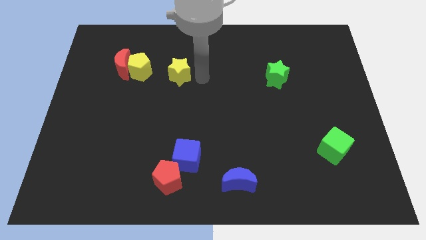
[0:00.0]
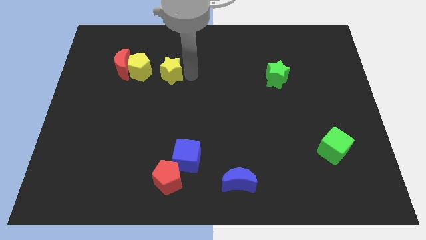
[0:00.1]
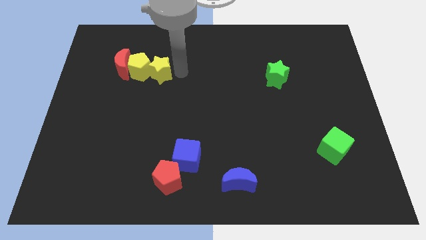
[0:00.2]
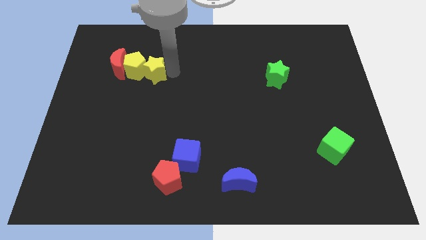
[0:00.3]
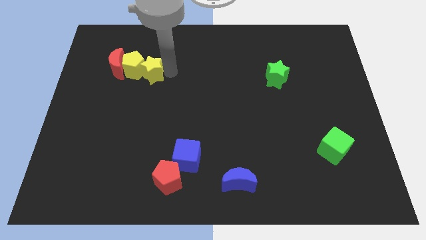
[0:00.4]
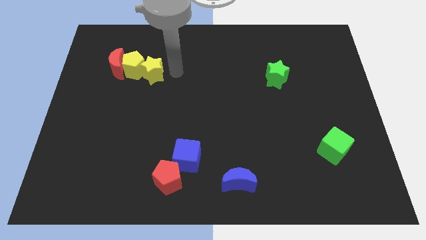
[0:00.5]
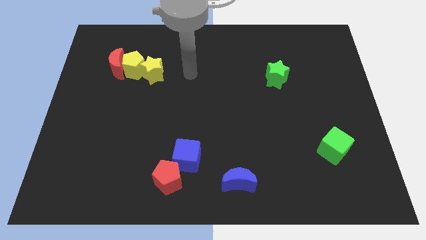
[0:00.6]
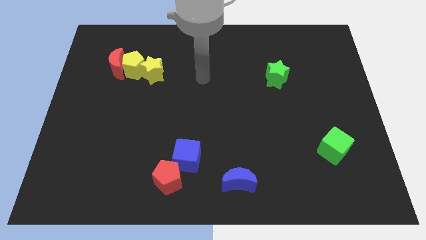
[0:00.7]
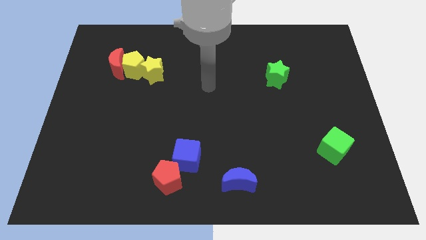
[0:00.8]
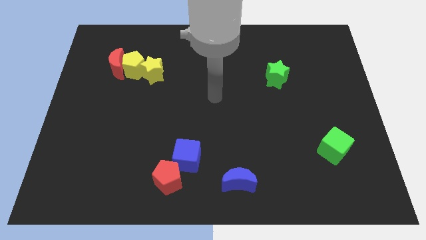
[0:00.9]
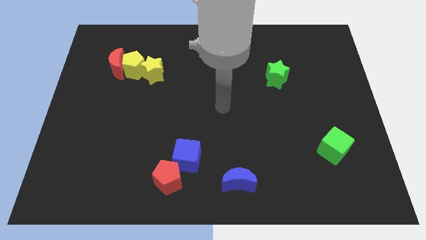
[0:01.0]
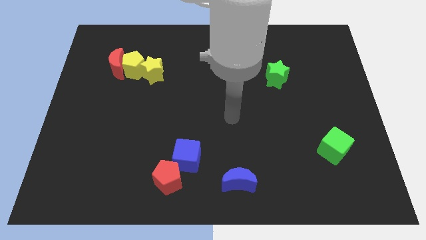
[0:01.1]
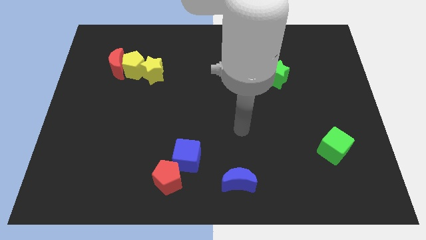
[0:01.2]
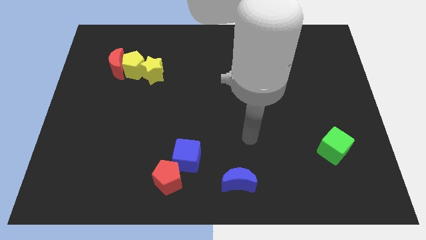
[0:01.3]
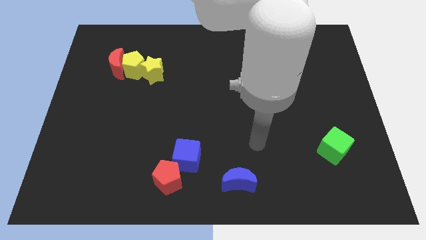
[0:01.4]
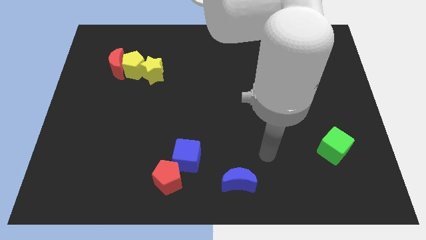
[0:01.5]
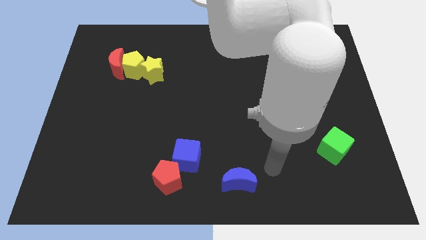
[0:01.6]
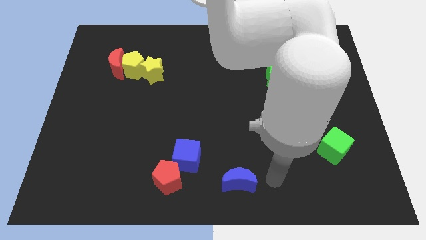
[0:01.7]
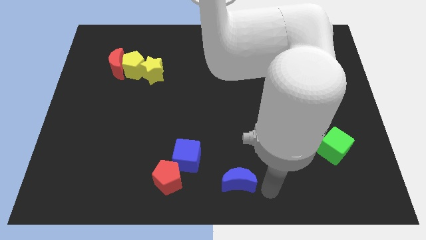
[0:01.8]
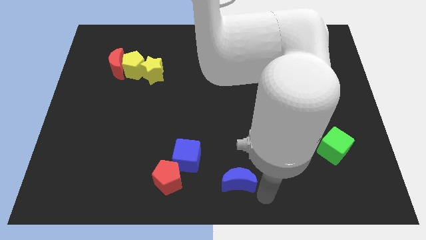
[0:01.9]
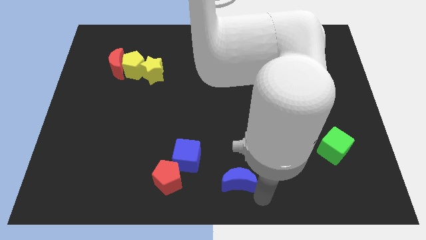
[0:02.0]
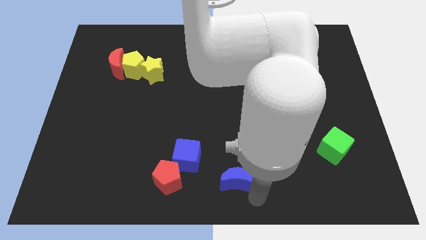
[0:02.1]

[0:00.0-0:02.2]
push the yellow pentagon and red crescent with yellow star

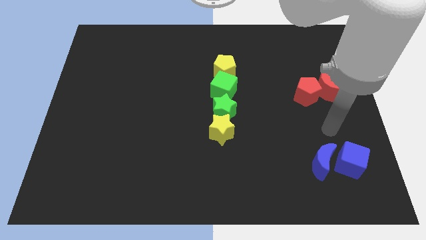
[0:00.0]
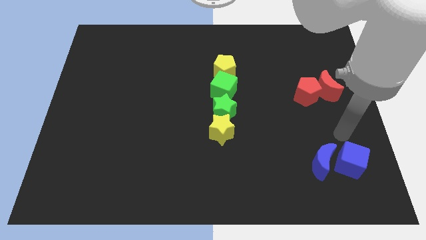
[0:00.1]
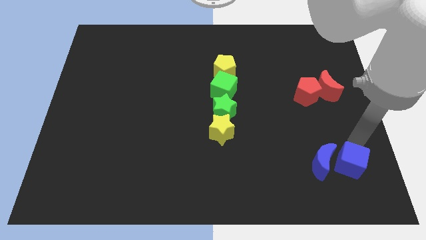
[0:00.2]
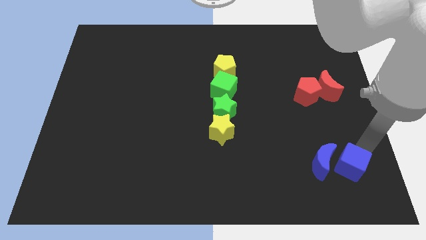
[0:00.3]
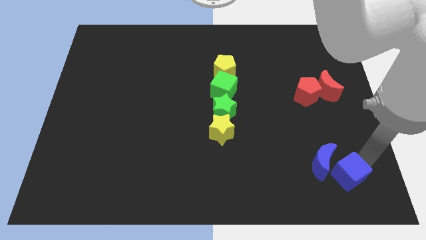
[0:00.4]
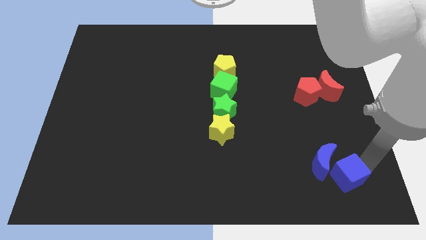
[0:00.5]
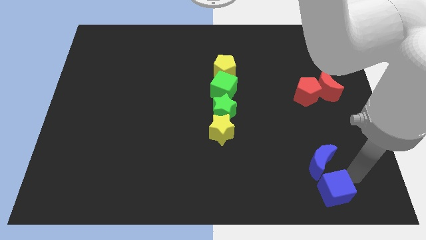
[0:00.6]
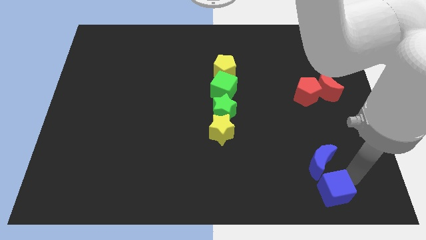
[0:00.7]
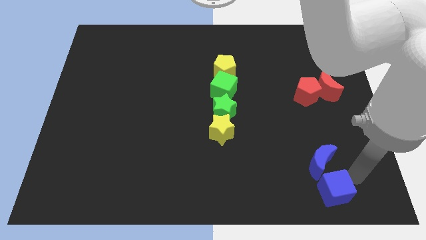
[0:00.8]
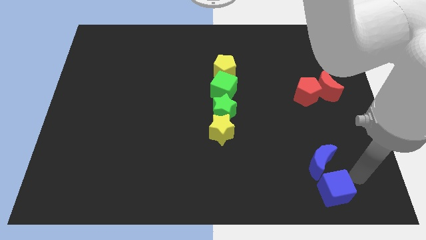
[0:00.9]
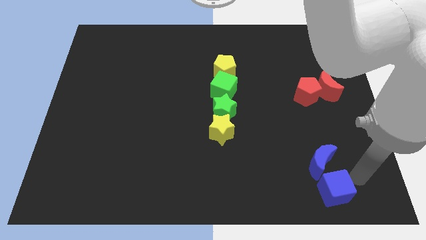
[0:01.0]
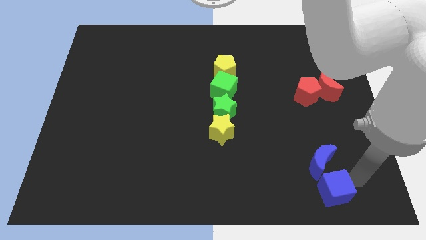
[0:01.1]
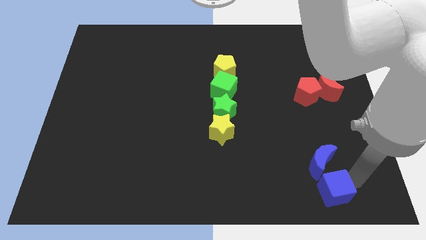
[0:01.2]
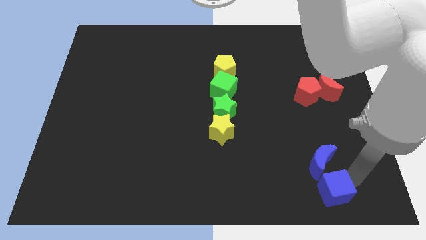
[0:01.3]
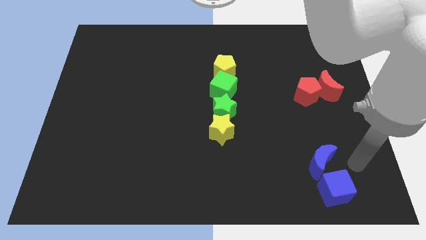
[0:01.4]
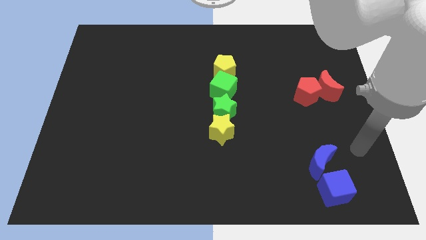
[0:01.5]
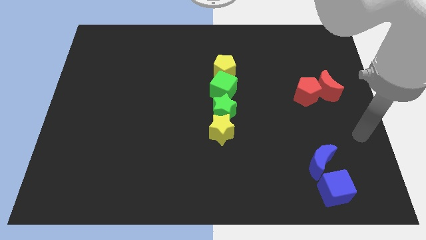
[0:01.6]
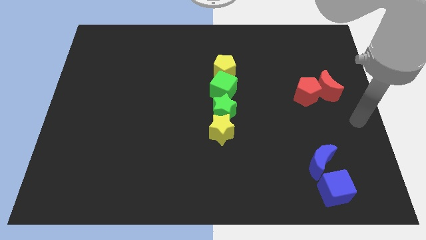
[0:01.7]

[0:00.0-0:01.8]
place the blue cube bottom to the blue crescent

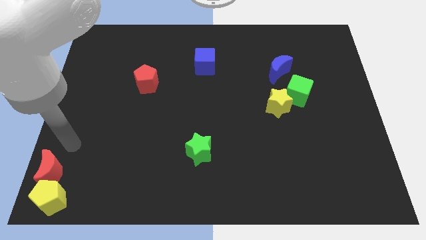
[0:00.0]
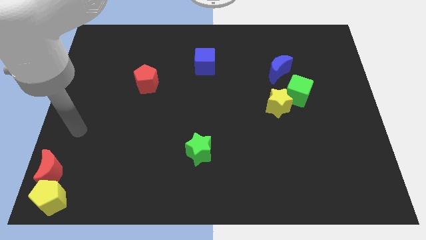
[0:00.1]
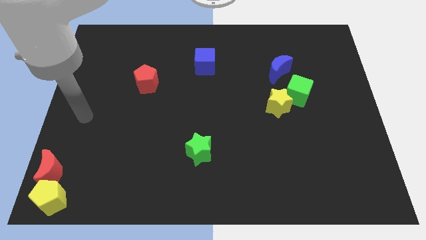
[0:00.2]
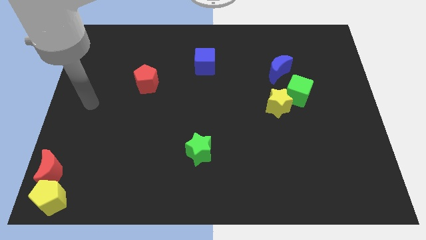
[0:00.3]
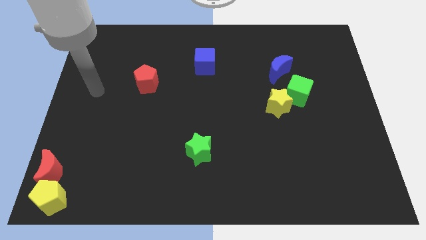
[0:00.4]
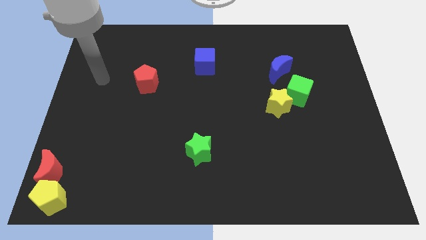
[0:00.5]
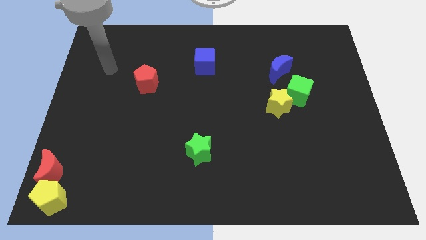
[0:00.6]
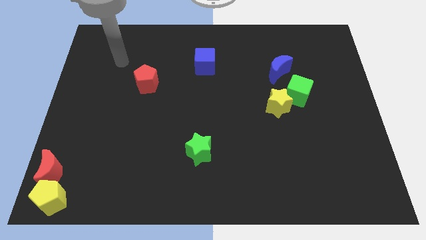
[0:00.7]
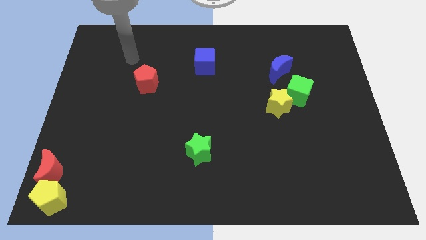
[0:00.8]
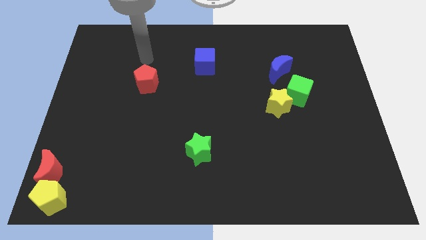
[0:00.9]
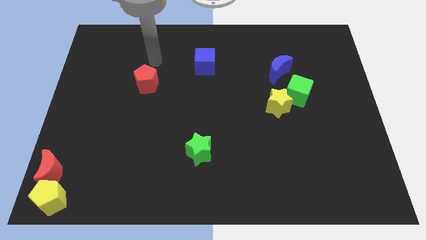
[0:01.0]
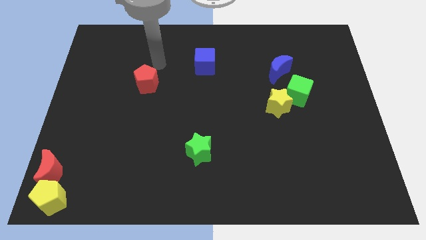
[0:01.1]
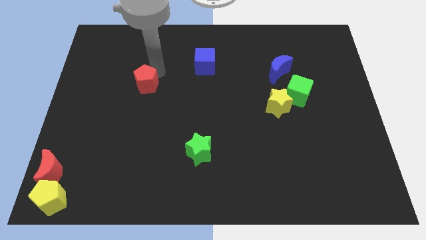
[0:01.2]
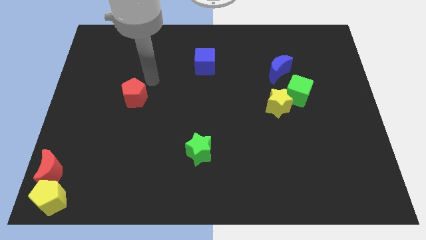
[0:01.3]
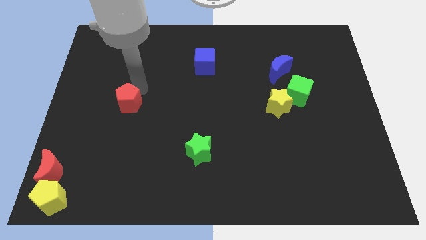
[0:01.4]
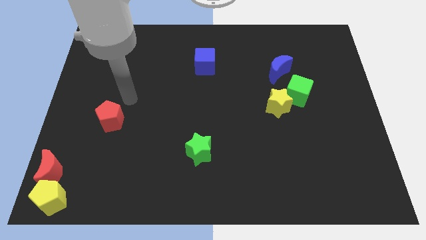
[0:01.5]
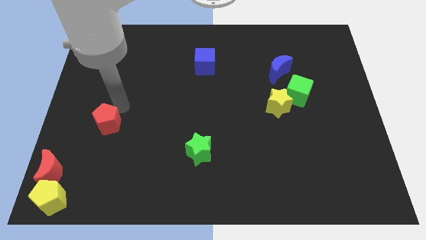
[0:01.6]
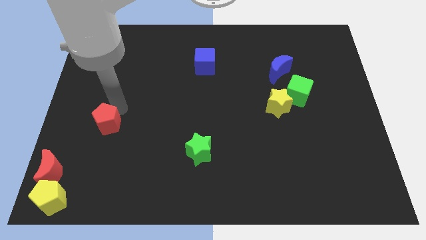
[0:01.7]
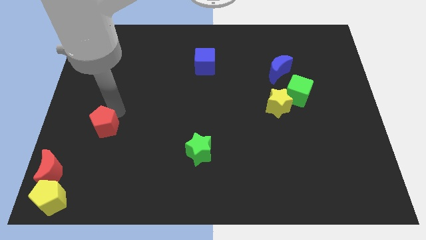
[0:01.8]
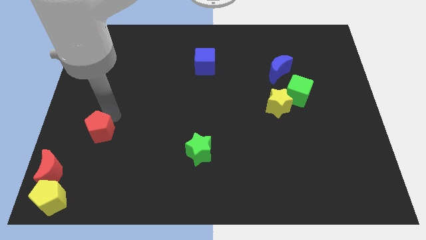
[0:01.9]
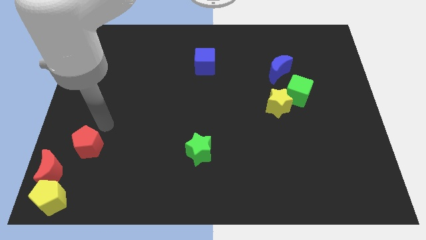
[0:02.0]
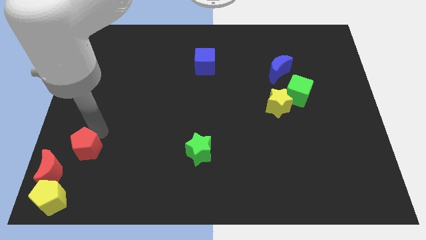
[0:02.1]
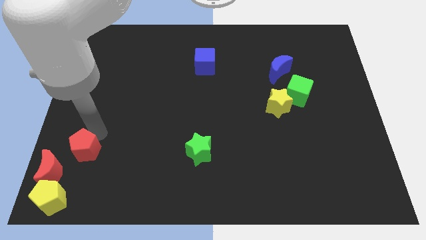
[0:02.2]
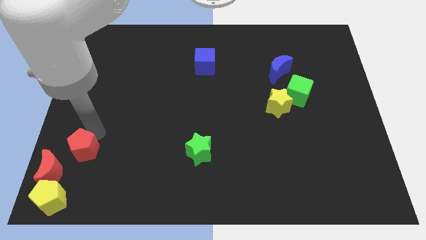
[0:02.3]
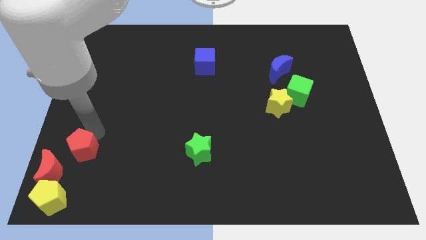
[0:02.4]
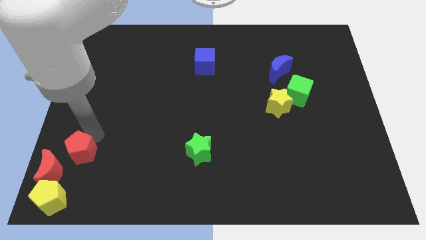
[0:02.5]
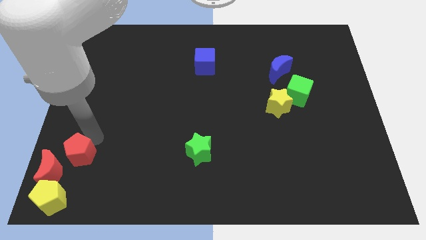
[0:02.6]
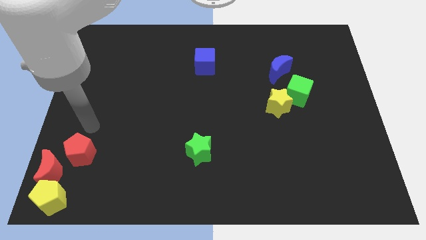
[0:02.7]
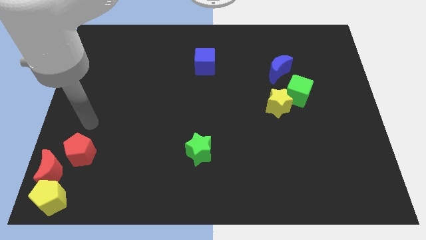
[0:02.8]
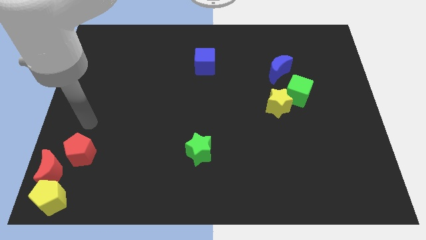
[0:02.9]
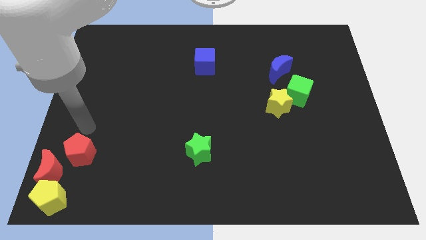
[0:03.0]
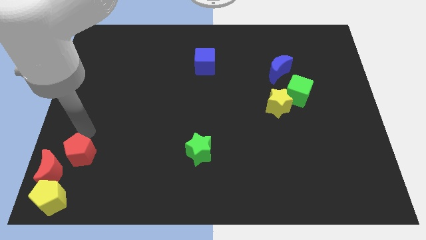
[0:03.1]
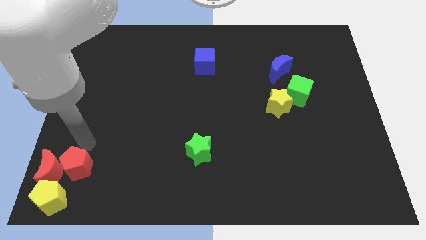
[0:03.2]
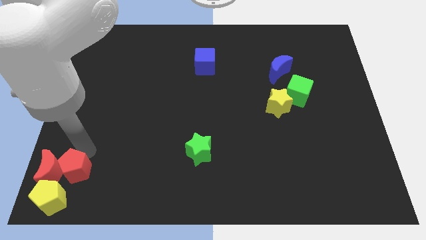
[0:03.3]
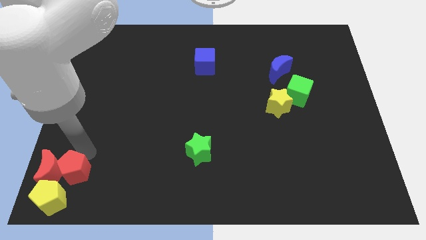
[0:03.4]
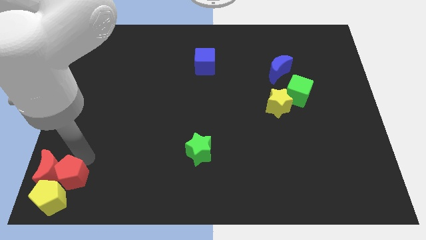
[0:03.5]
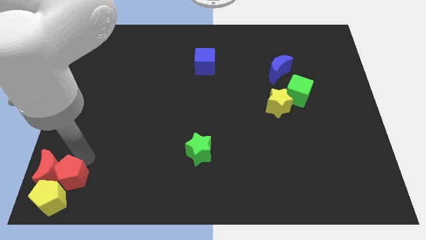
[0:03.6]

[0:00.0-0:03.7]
place the red pentagon right to the red crescent

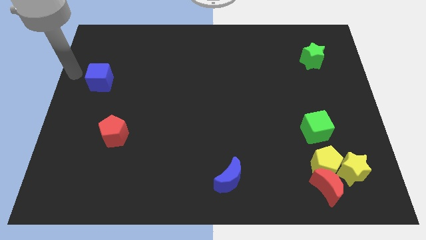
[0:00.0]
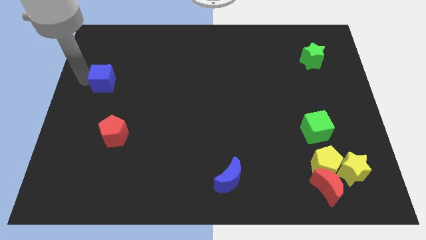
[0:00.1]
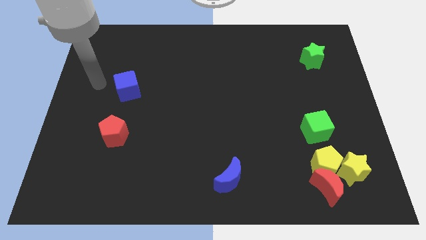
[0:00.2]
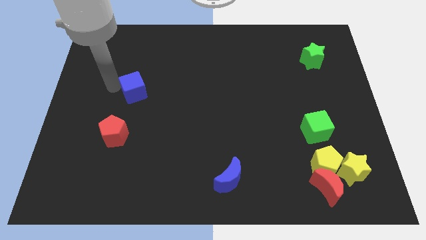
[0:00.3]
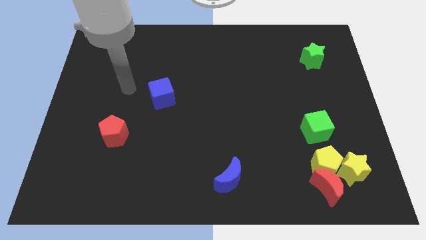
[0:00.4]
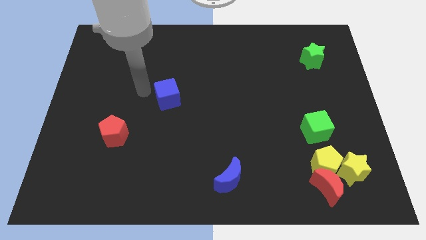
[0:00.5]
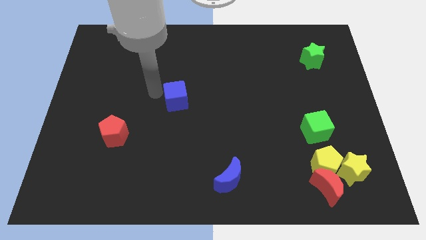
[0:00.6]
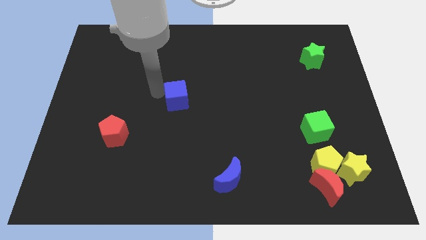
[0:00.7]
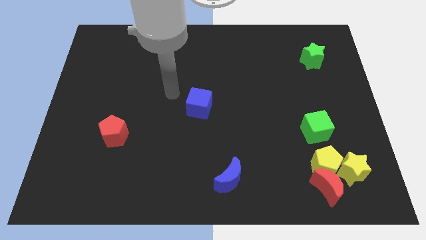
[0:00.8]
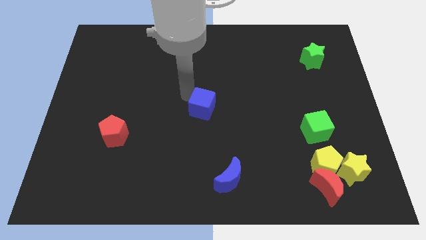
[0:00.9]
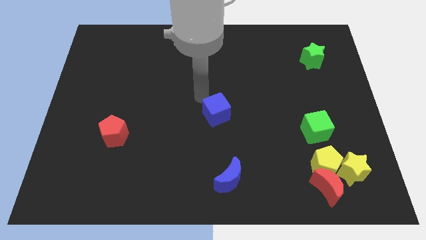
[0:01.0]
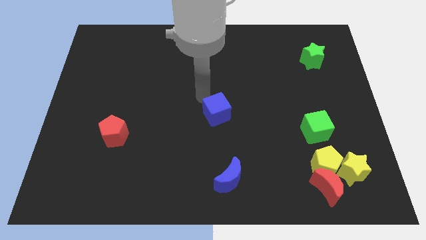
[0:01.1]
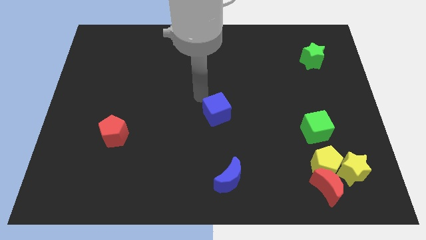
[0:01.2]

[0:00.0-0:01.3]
move blue cube to the top of the blue moon

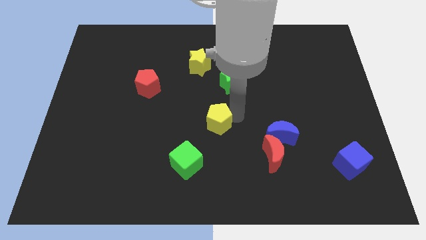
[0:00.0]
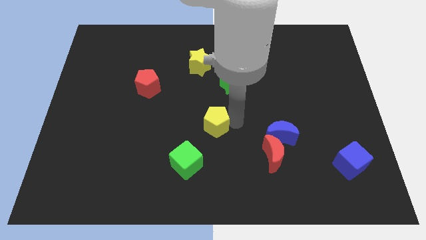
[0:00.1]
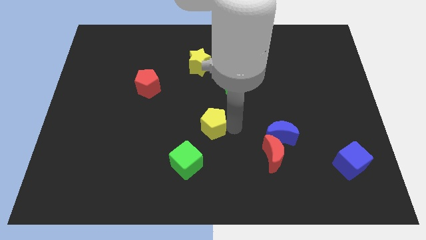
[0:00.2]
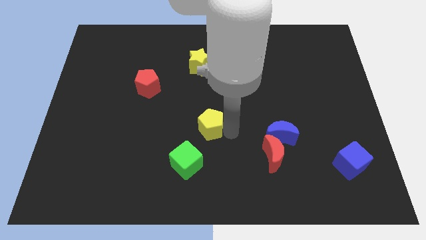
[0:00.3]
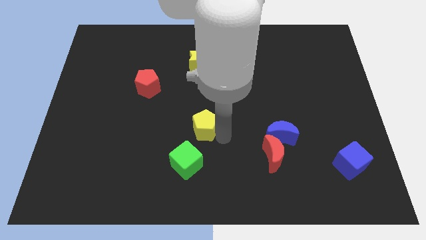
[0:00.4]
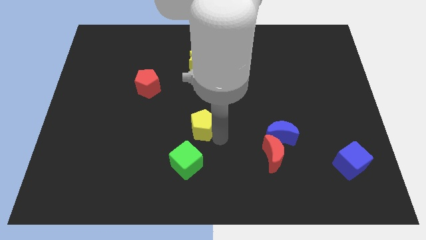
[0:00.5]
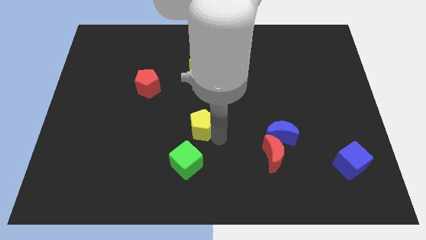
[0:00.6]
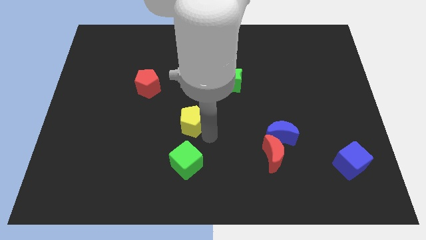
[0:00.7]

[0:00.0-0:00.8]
place yellow pentagon above green cube
